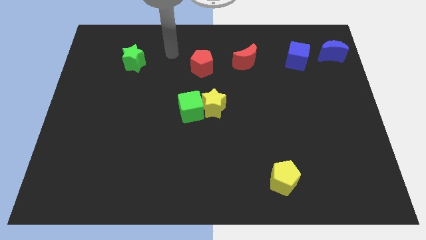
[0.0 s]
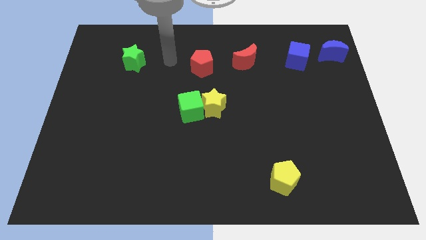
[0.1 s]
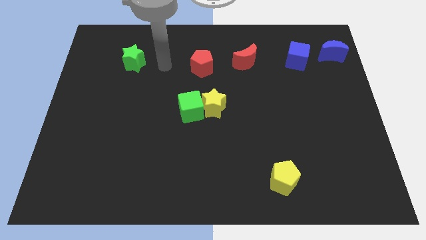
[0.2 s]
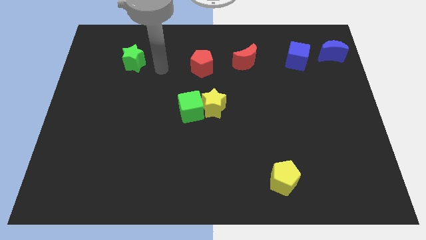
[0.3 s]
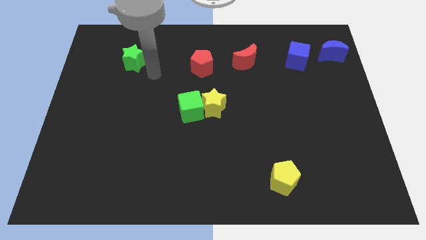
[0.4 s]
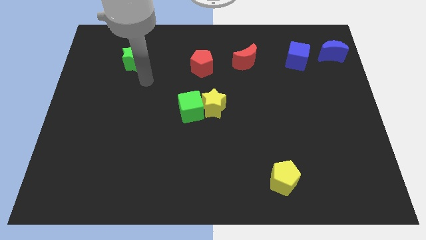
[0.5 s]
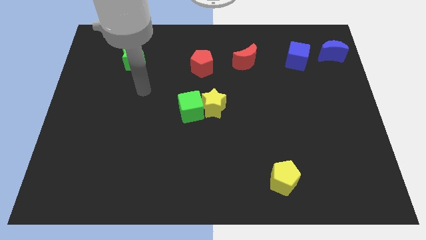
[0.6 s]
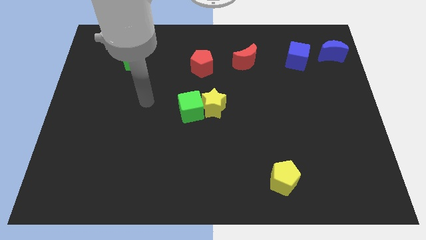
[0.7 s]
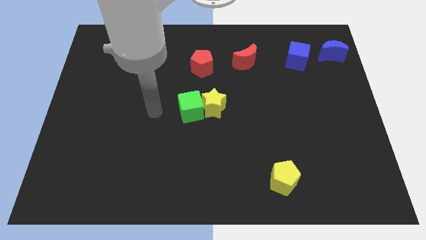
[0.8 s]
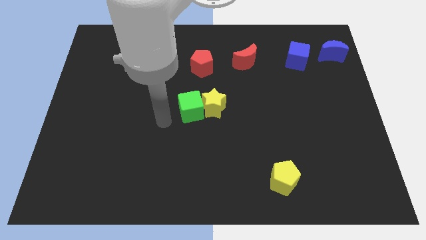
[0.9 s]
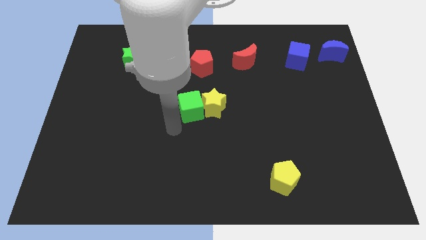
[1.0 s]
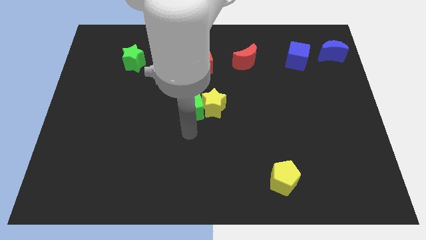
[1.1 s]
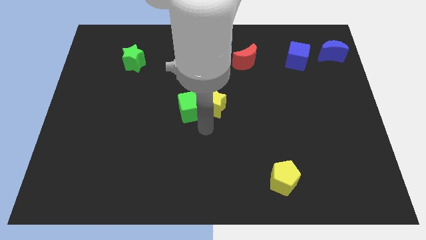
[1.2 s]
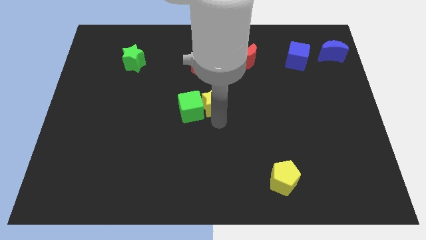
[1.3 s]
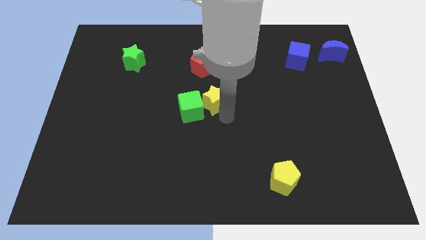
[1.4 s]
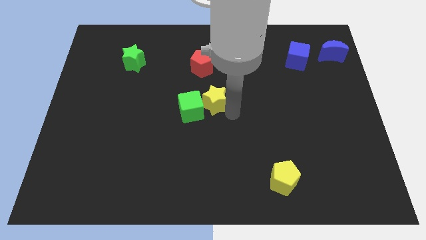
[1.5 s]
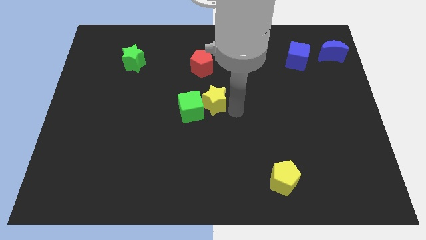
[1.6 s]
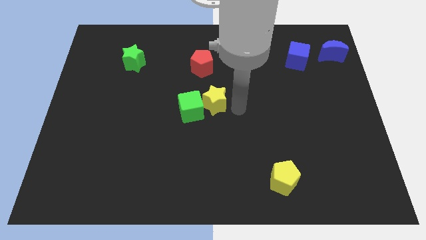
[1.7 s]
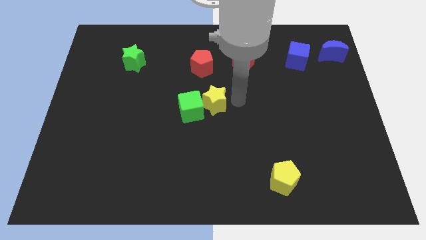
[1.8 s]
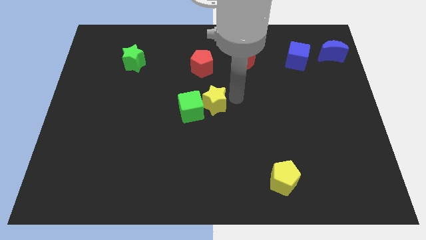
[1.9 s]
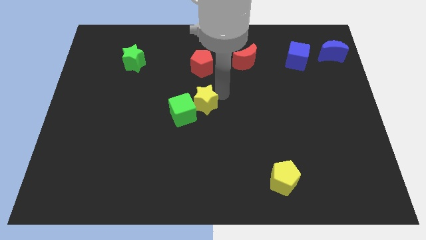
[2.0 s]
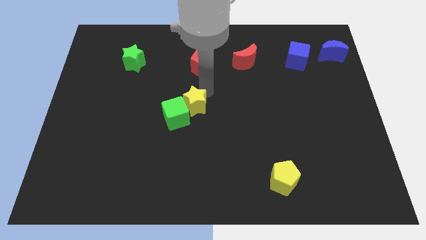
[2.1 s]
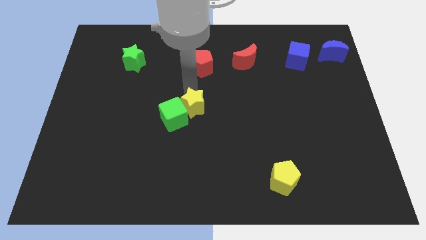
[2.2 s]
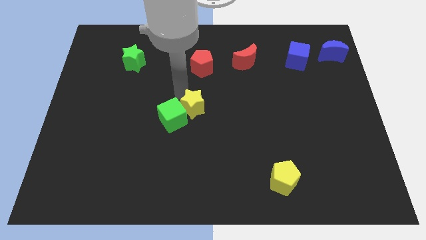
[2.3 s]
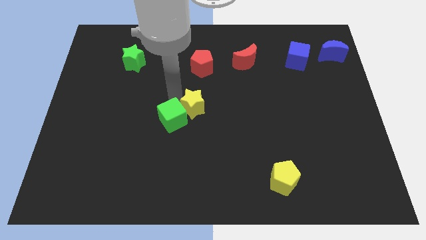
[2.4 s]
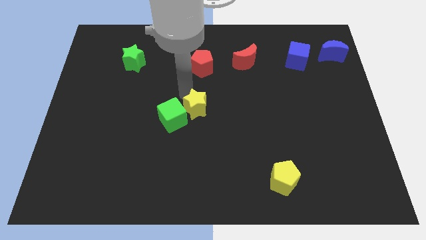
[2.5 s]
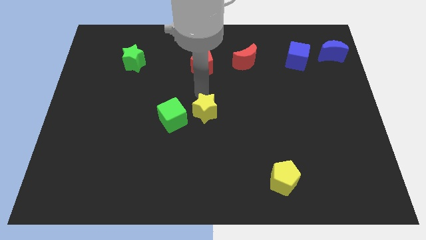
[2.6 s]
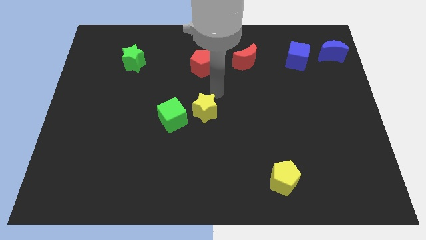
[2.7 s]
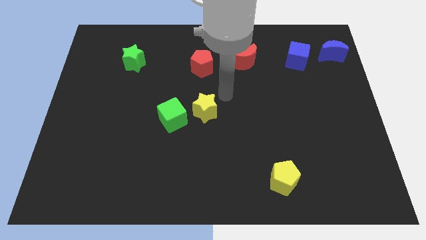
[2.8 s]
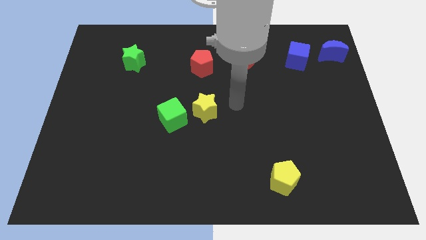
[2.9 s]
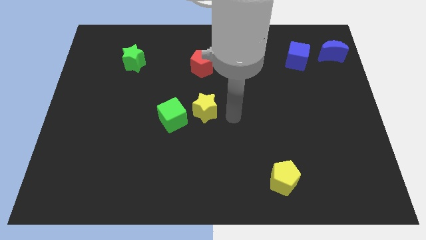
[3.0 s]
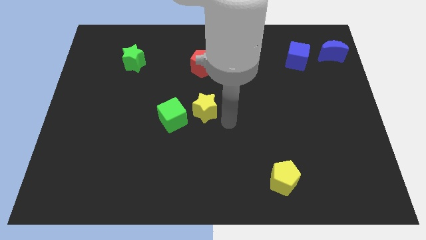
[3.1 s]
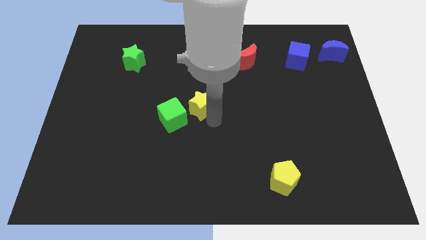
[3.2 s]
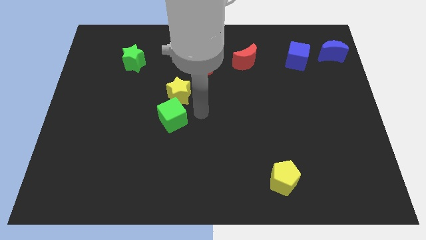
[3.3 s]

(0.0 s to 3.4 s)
move your arm towards the yellow star and push the yellow star towards top left side

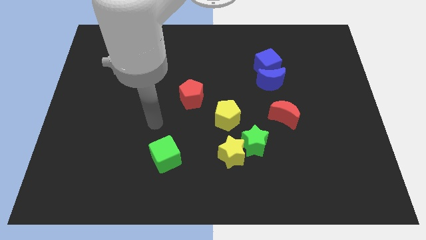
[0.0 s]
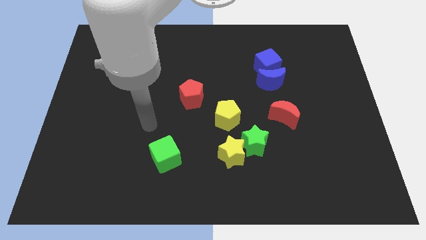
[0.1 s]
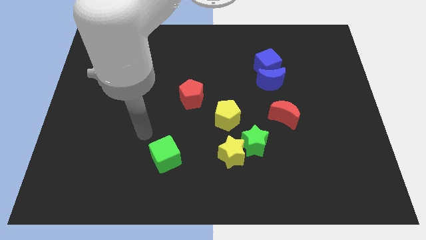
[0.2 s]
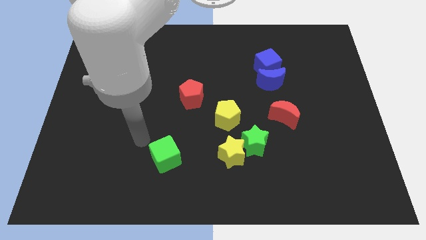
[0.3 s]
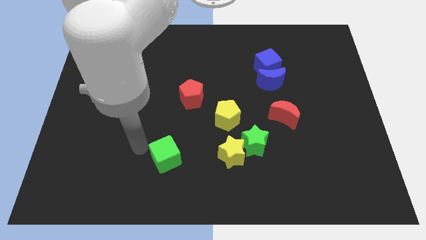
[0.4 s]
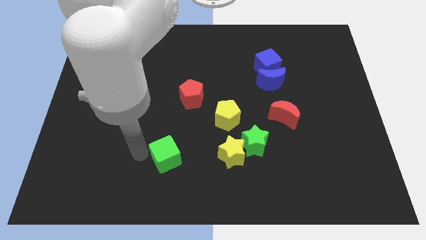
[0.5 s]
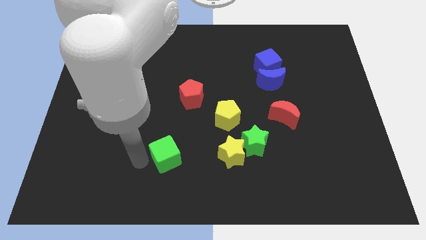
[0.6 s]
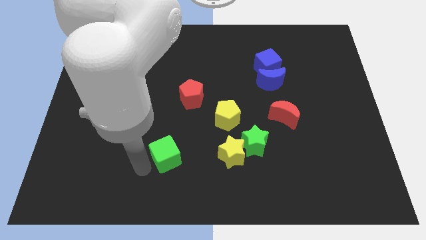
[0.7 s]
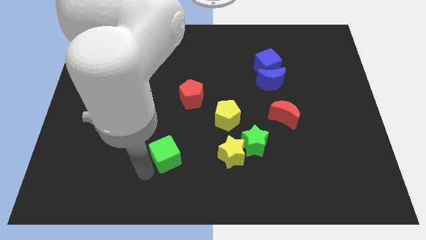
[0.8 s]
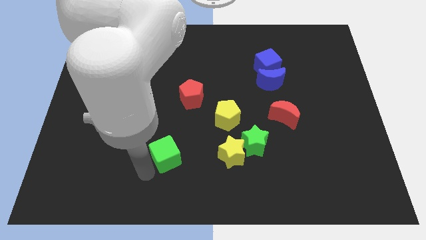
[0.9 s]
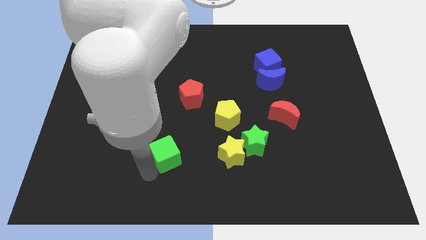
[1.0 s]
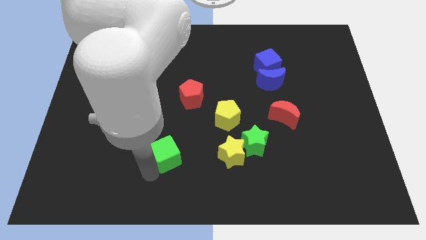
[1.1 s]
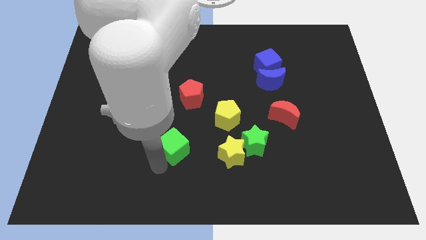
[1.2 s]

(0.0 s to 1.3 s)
tap the bottom of green cube

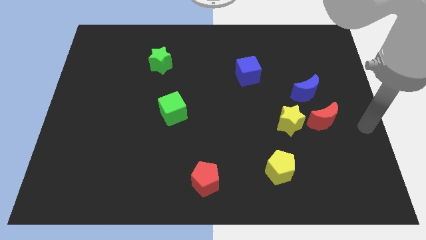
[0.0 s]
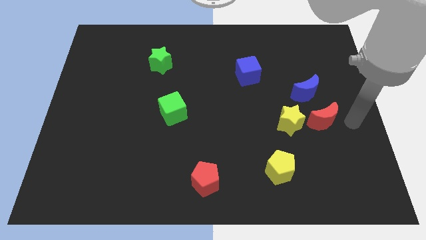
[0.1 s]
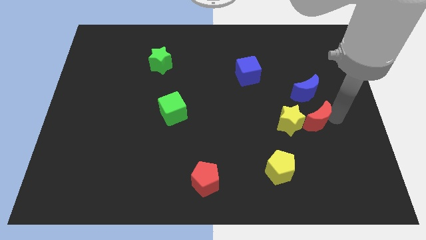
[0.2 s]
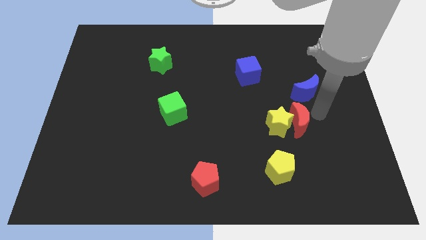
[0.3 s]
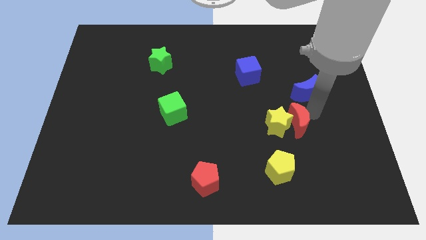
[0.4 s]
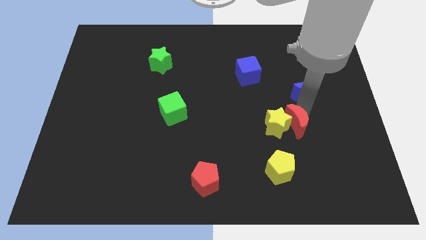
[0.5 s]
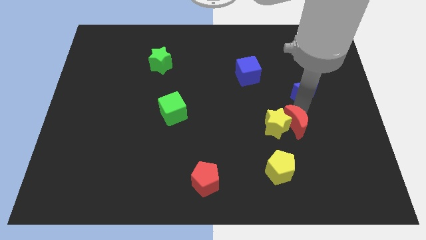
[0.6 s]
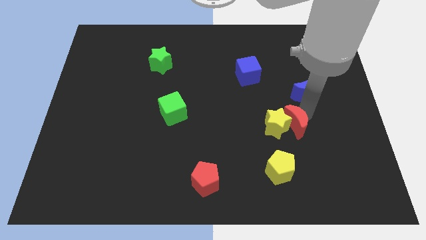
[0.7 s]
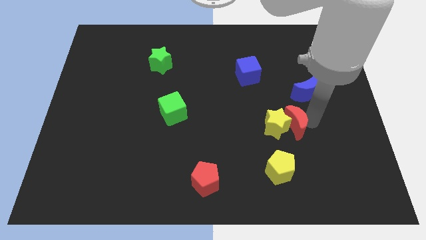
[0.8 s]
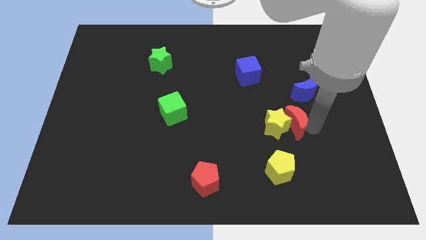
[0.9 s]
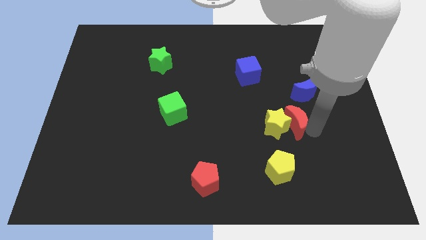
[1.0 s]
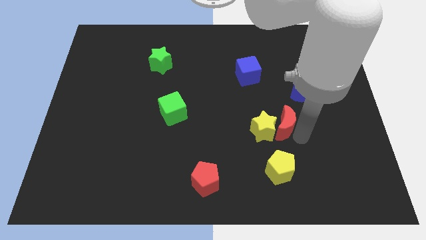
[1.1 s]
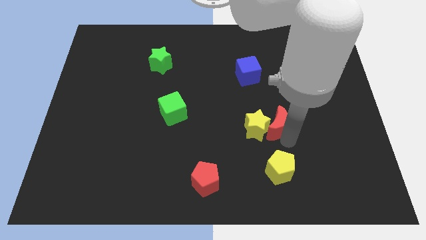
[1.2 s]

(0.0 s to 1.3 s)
move red crescent into yellow star

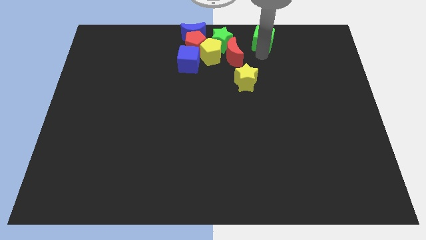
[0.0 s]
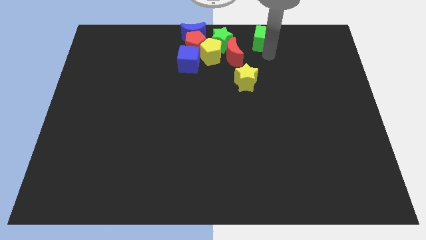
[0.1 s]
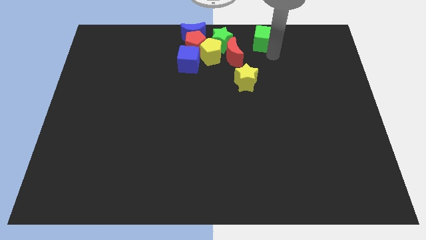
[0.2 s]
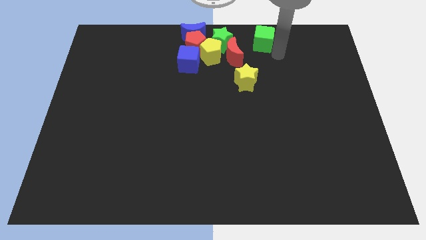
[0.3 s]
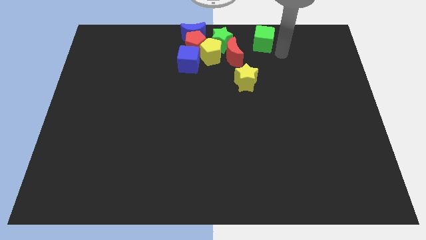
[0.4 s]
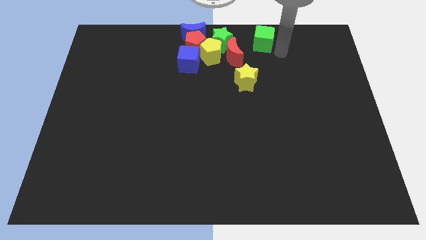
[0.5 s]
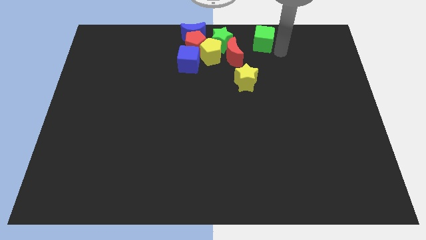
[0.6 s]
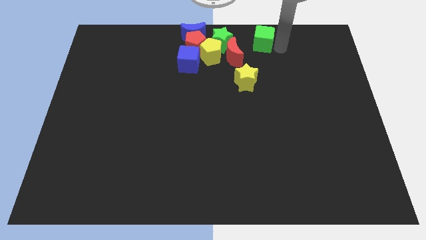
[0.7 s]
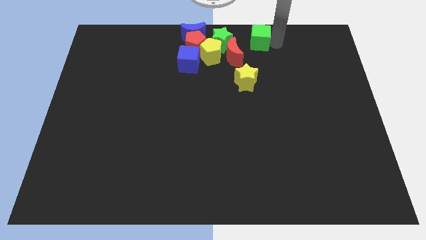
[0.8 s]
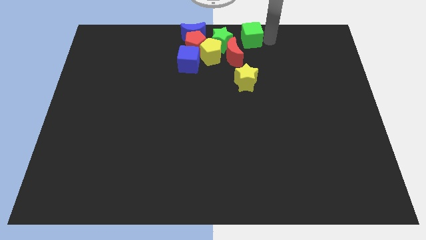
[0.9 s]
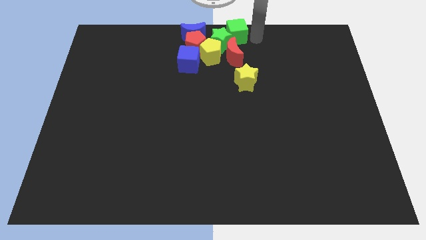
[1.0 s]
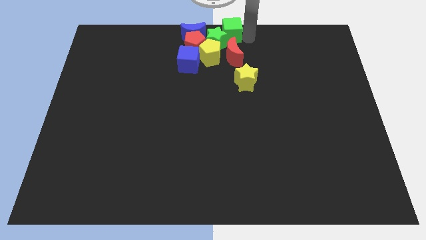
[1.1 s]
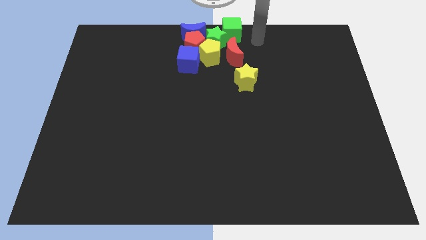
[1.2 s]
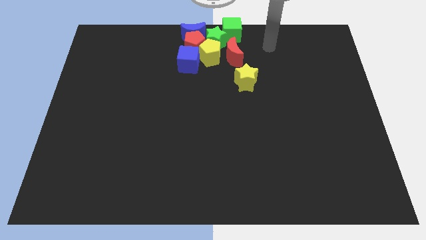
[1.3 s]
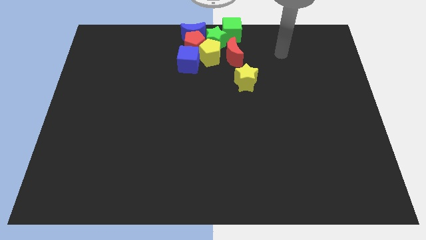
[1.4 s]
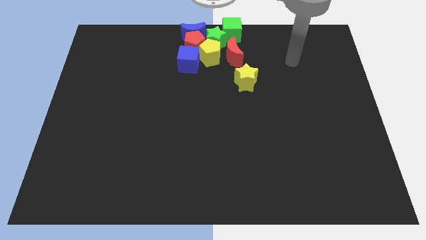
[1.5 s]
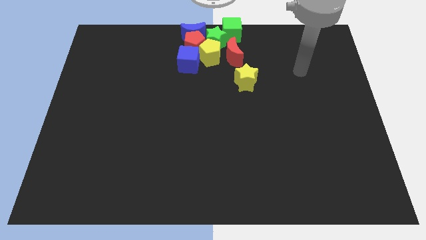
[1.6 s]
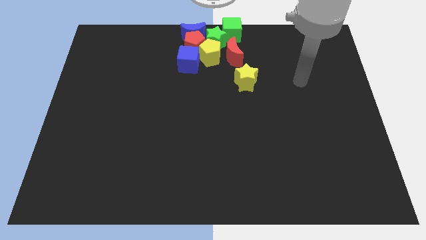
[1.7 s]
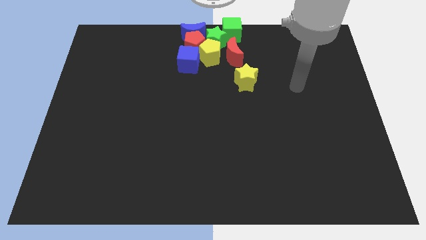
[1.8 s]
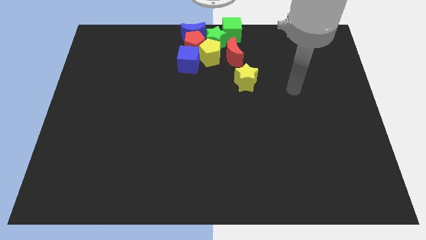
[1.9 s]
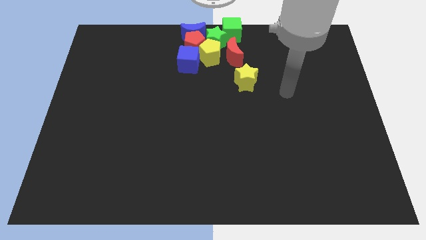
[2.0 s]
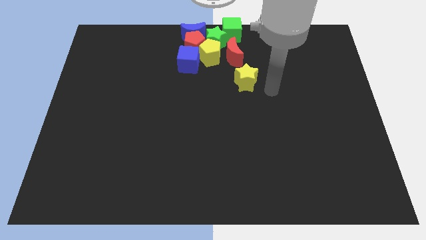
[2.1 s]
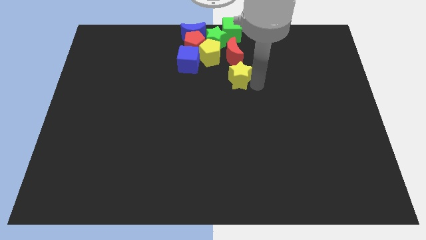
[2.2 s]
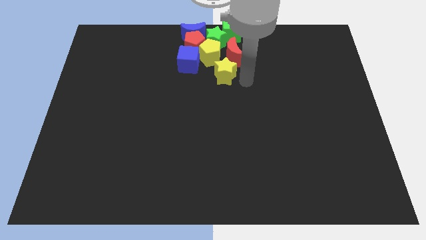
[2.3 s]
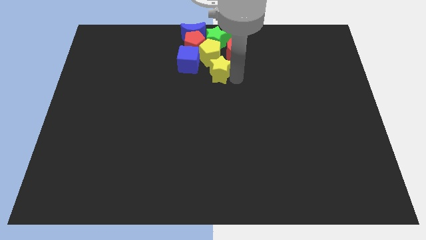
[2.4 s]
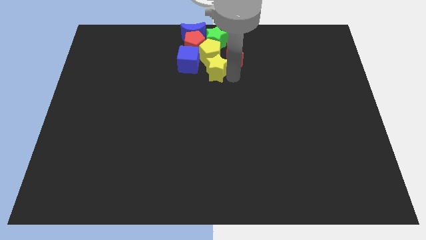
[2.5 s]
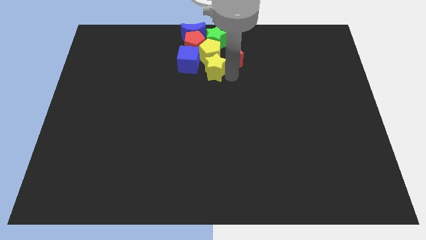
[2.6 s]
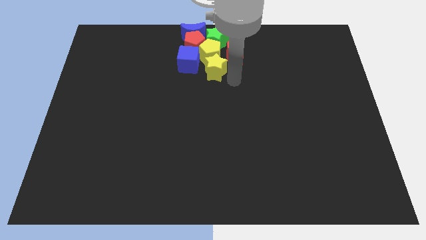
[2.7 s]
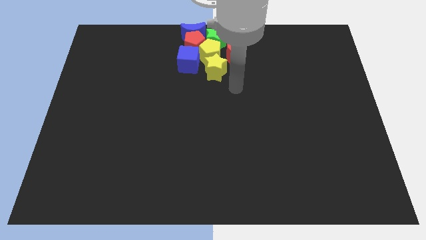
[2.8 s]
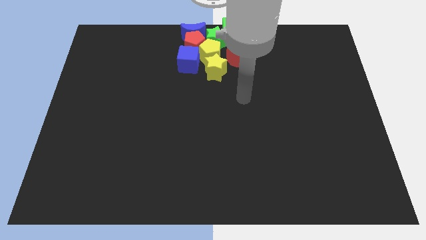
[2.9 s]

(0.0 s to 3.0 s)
place green cube at the top of group of blocks
